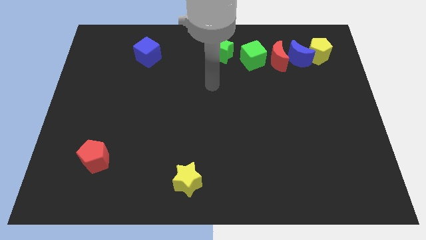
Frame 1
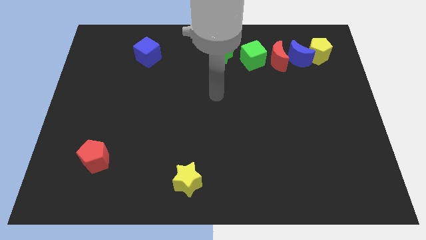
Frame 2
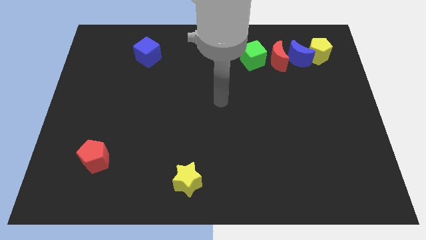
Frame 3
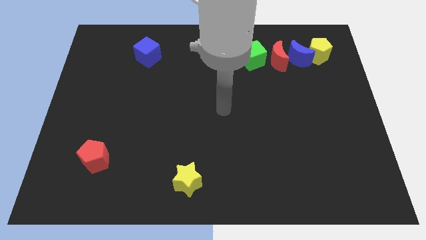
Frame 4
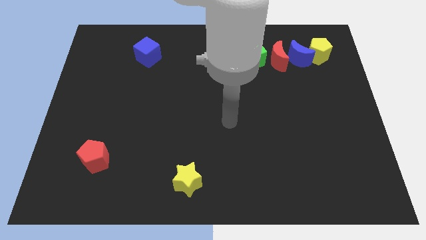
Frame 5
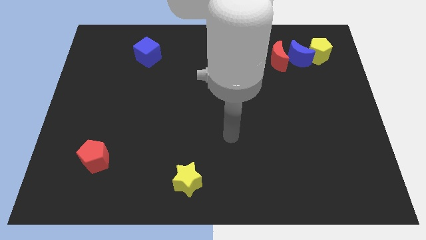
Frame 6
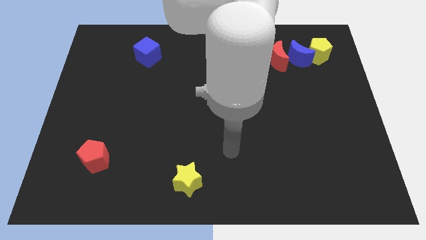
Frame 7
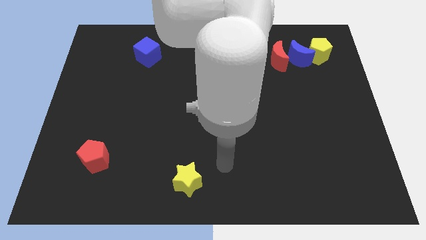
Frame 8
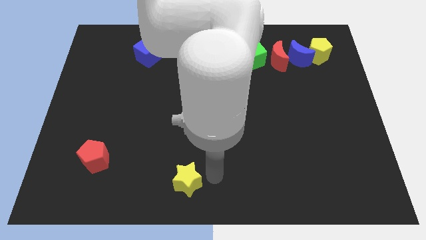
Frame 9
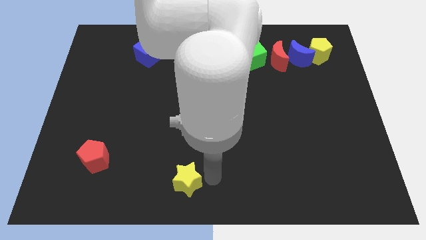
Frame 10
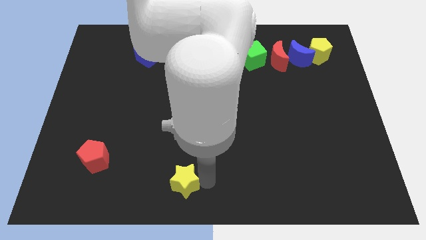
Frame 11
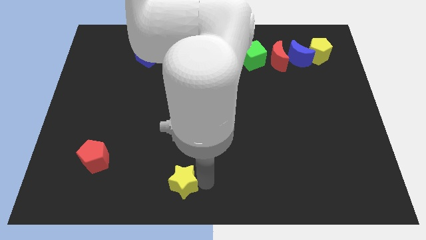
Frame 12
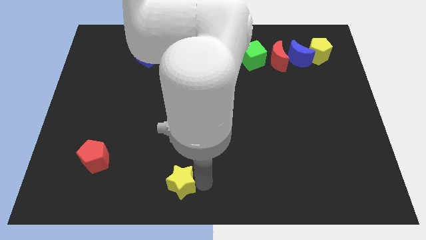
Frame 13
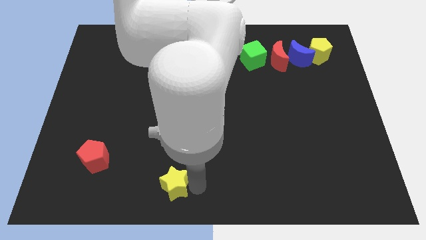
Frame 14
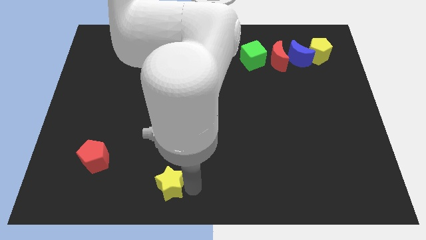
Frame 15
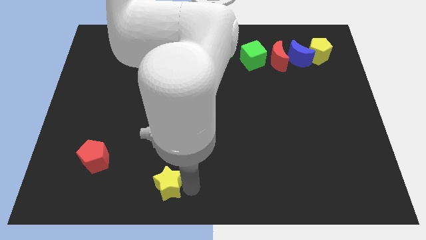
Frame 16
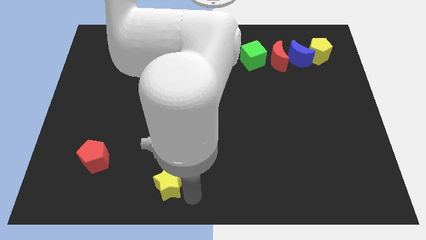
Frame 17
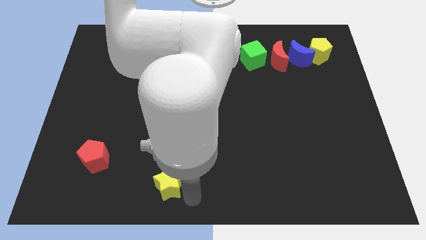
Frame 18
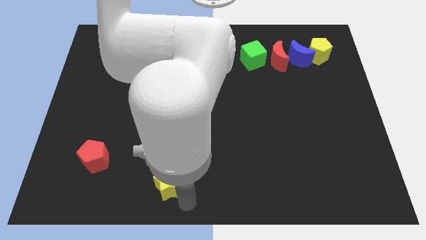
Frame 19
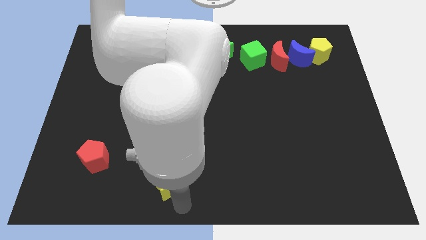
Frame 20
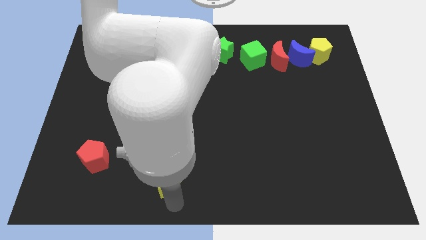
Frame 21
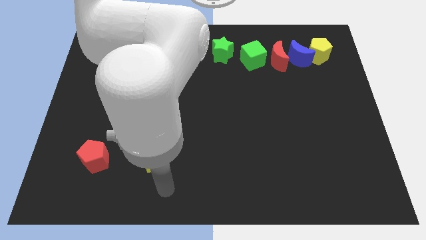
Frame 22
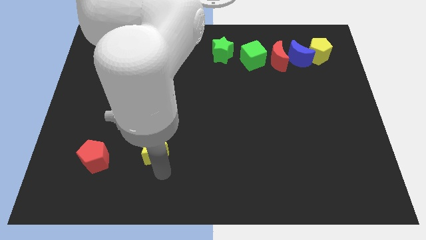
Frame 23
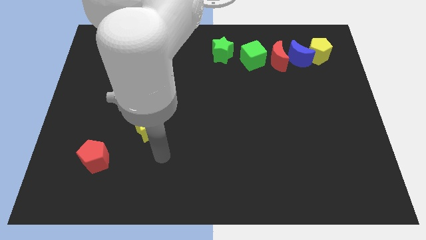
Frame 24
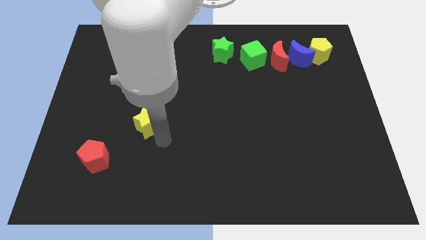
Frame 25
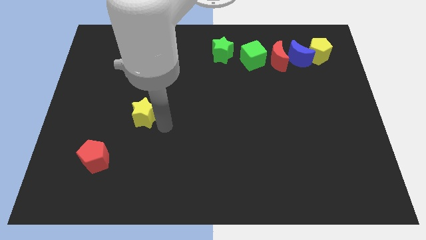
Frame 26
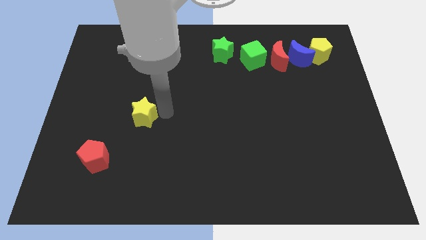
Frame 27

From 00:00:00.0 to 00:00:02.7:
place the yellow star top right diagonallu to the red pentagon

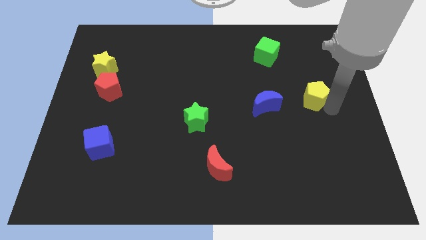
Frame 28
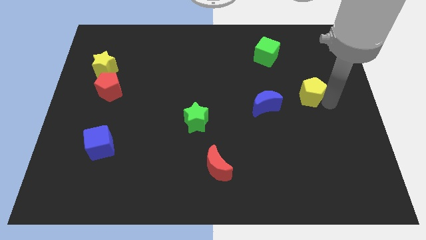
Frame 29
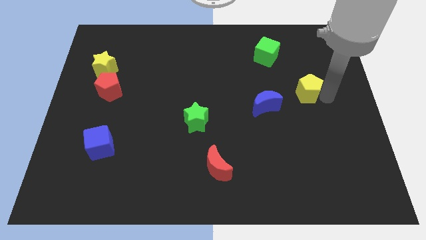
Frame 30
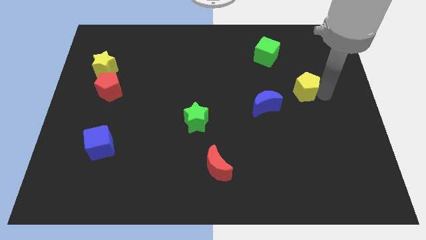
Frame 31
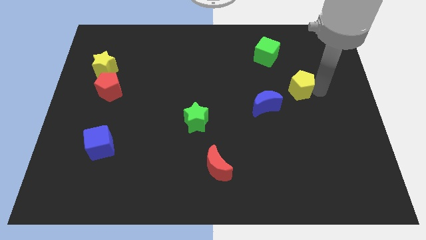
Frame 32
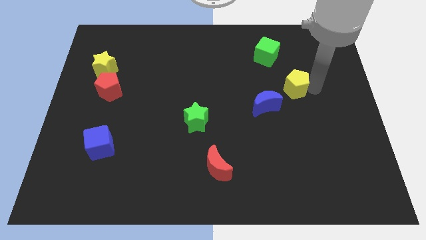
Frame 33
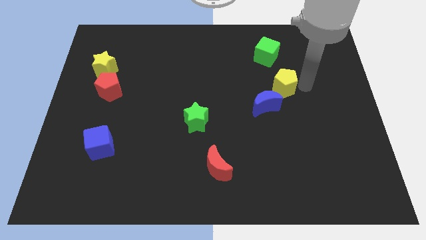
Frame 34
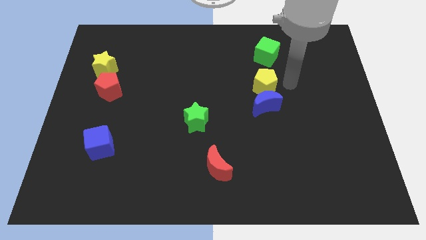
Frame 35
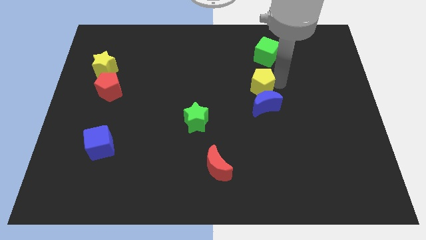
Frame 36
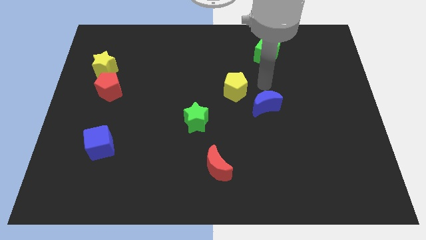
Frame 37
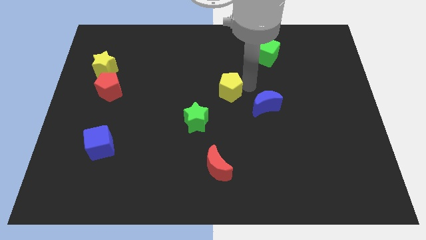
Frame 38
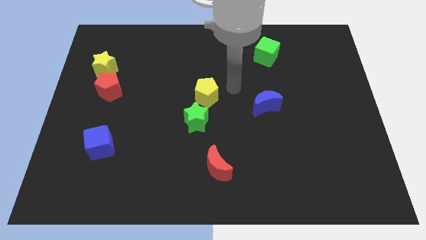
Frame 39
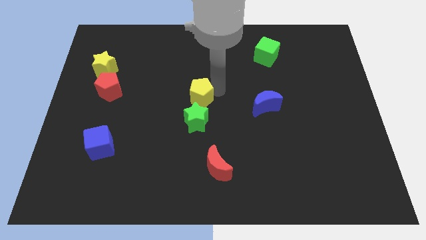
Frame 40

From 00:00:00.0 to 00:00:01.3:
place yellow pentagon above the green star

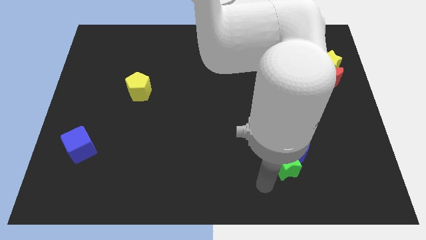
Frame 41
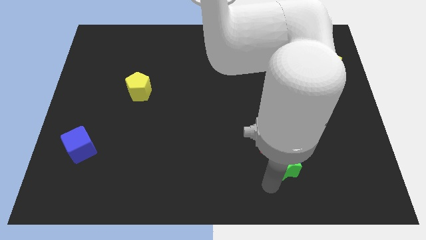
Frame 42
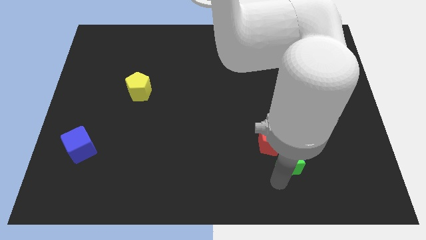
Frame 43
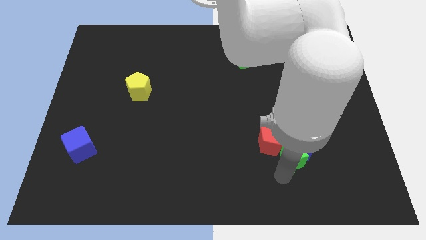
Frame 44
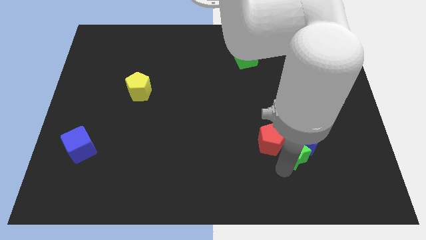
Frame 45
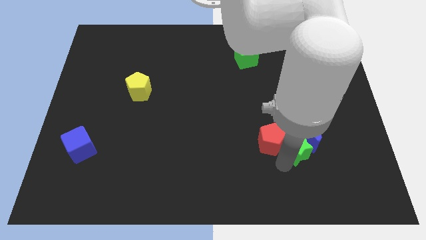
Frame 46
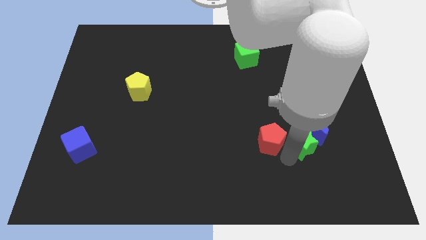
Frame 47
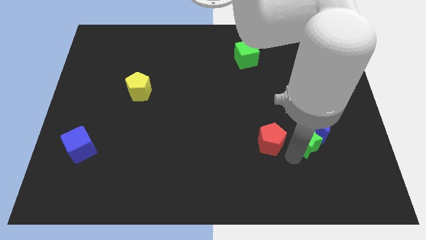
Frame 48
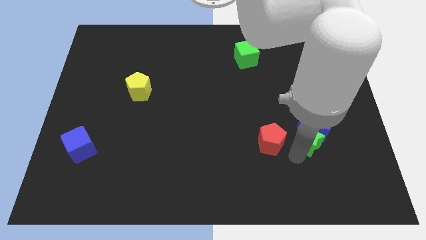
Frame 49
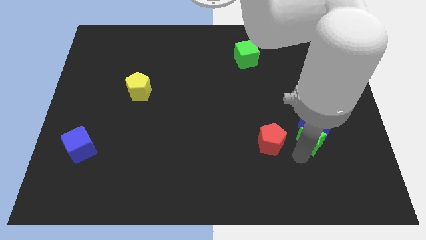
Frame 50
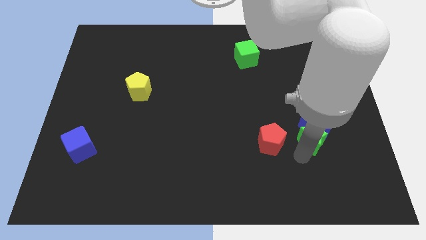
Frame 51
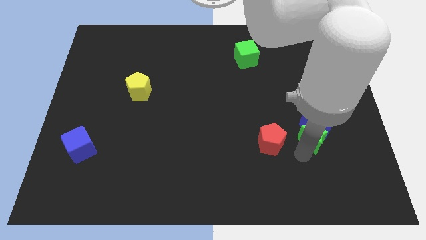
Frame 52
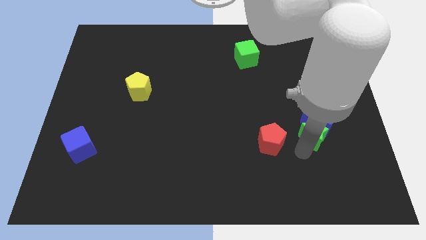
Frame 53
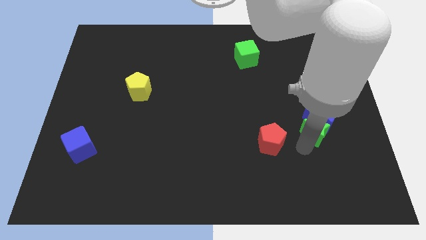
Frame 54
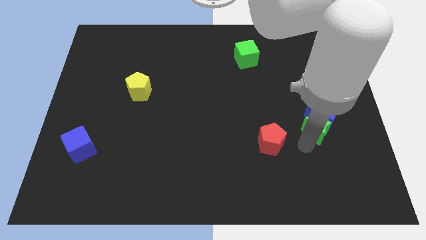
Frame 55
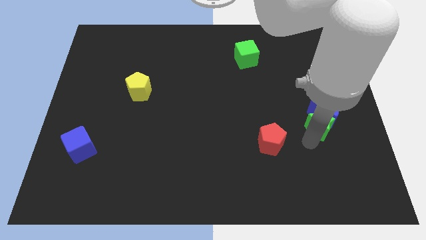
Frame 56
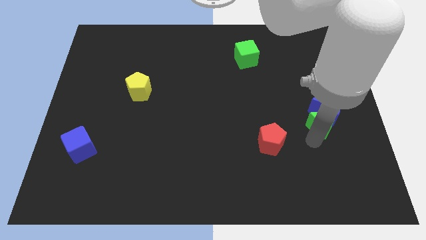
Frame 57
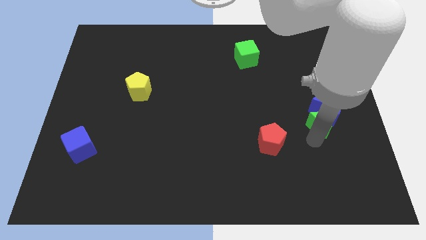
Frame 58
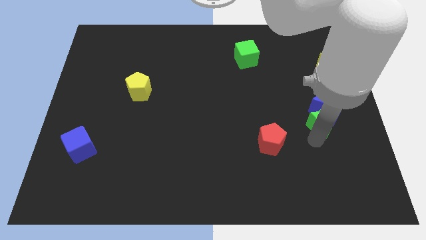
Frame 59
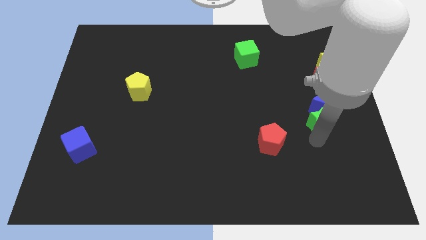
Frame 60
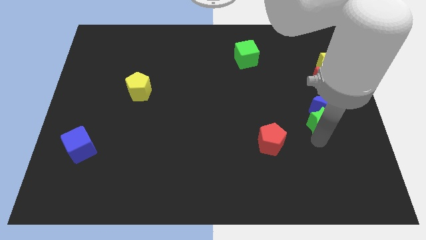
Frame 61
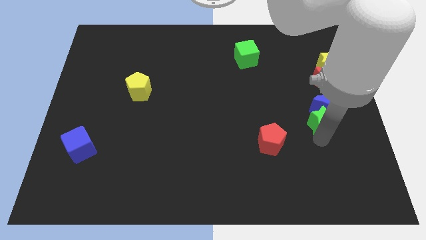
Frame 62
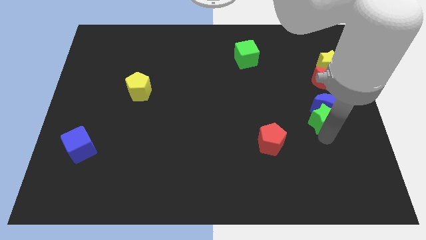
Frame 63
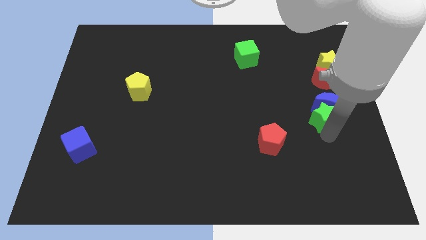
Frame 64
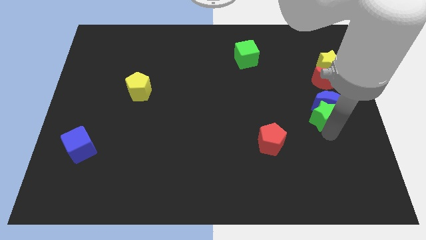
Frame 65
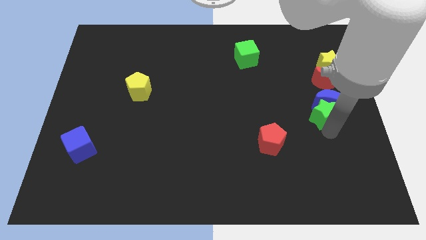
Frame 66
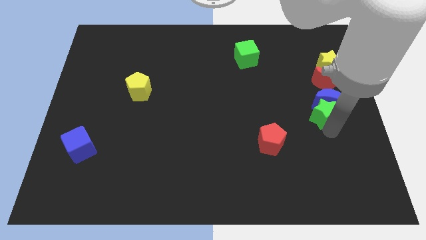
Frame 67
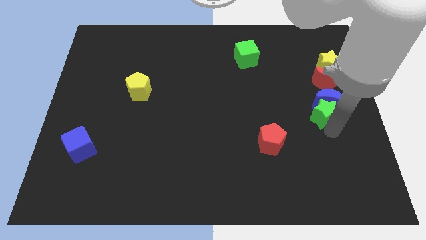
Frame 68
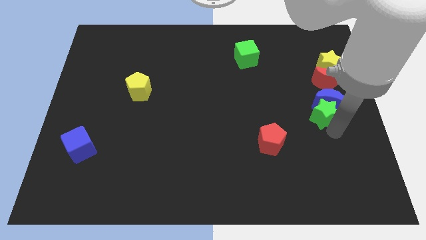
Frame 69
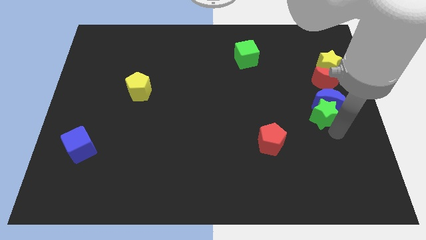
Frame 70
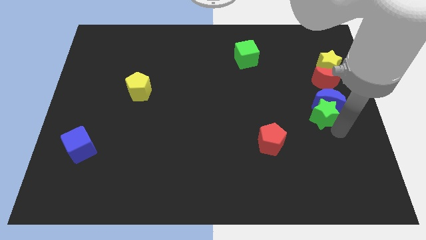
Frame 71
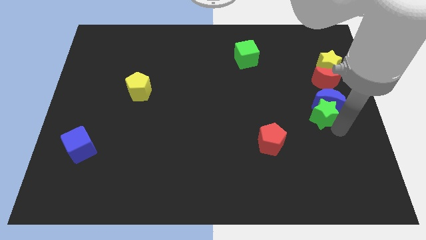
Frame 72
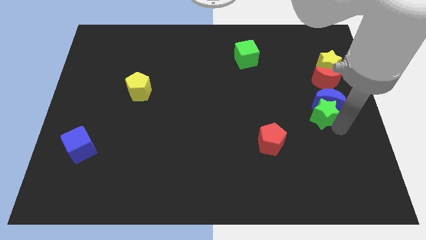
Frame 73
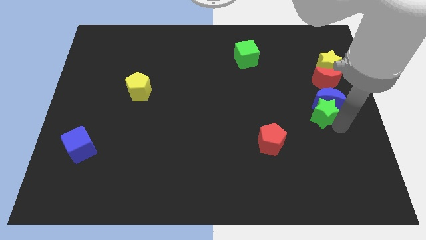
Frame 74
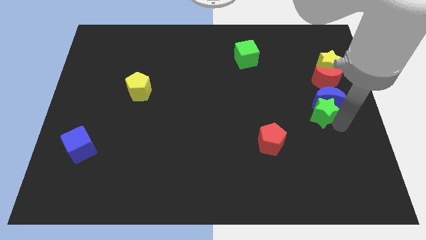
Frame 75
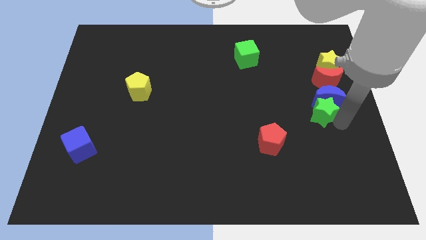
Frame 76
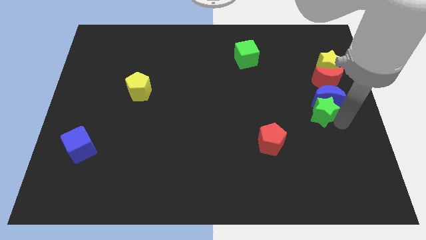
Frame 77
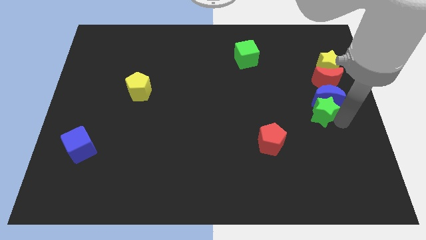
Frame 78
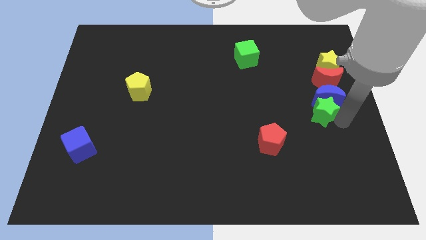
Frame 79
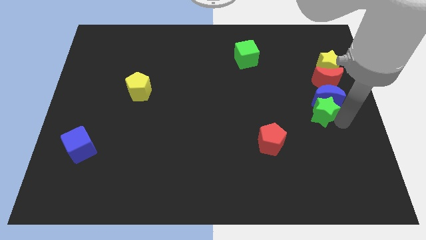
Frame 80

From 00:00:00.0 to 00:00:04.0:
push the blue crescent with the green star below the red crescent

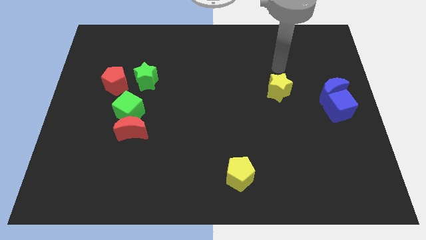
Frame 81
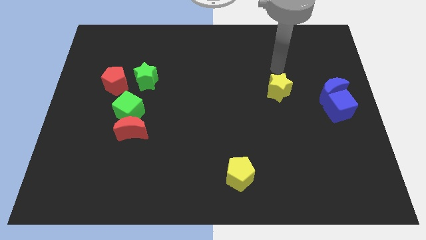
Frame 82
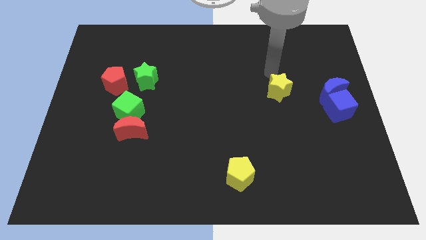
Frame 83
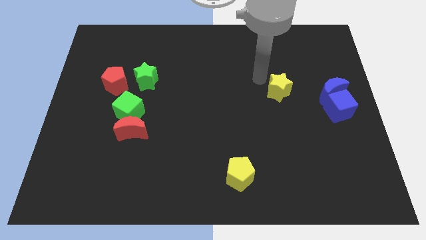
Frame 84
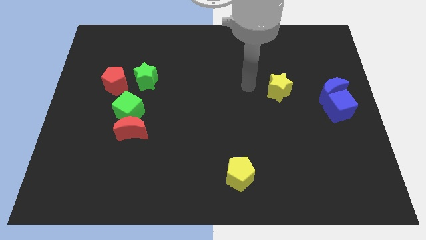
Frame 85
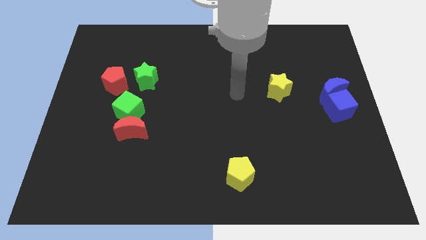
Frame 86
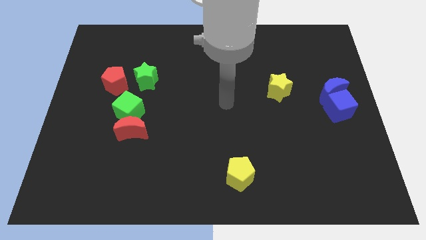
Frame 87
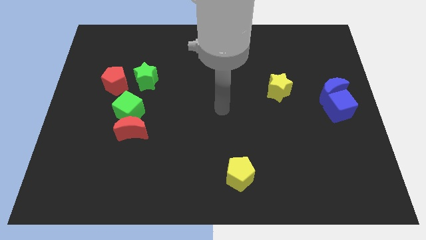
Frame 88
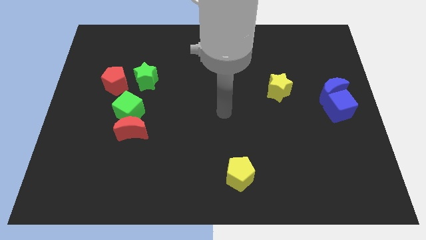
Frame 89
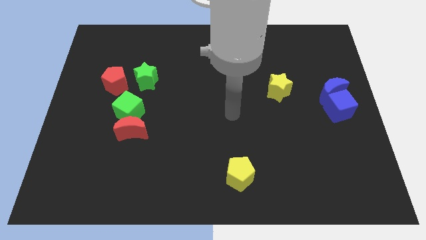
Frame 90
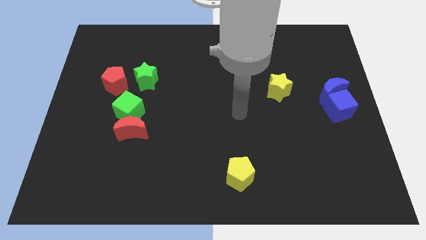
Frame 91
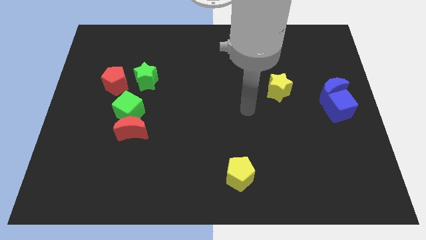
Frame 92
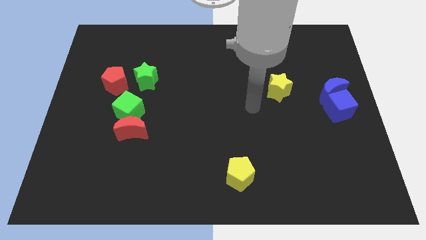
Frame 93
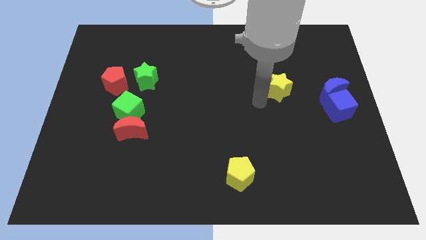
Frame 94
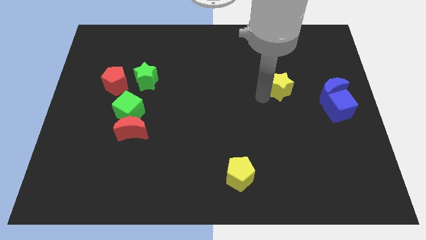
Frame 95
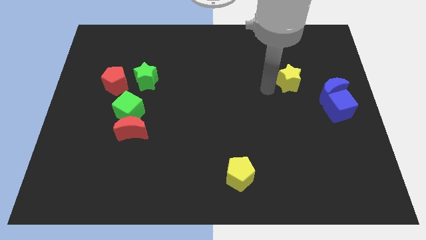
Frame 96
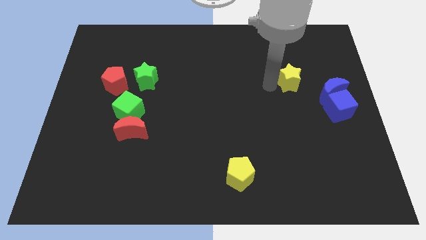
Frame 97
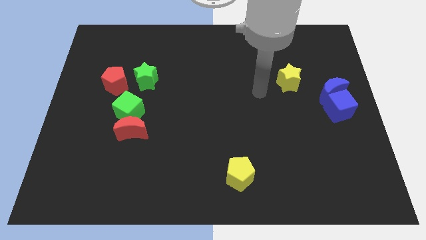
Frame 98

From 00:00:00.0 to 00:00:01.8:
push the yellow pentagon slightly
